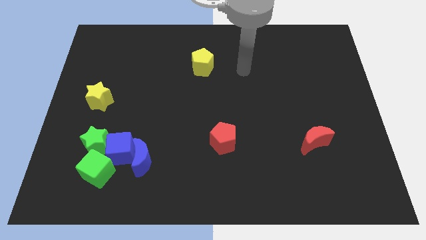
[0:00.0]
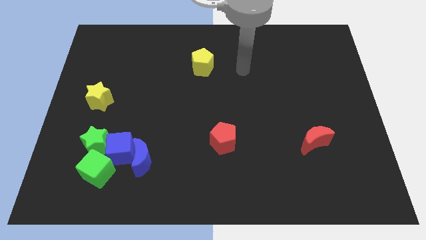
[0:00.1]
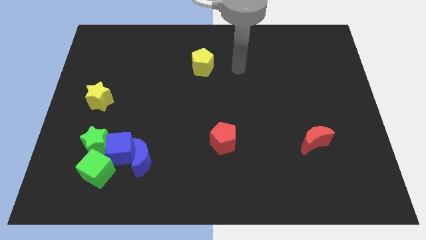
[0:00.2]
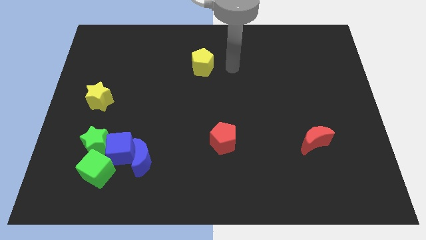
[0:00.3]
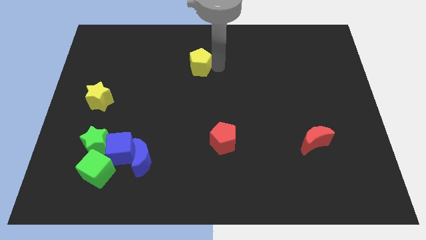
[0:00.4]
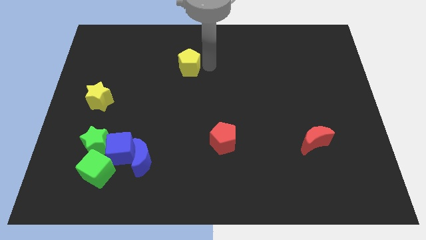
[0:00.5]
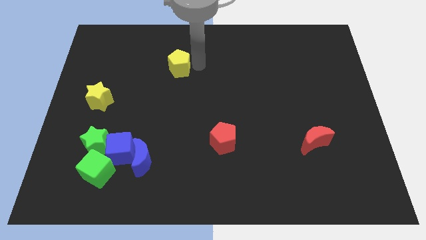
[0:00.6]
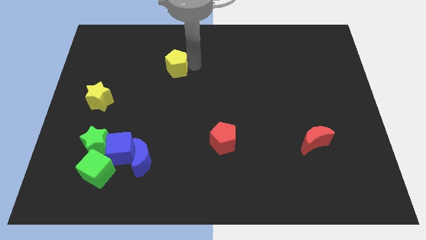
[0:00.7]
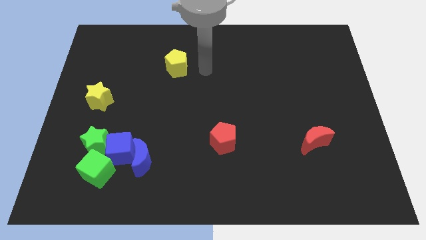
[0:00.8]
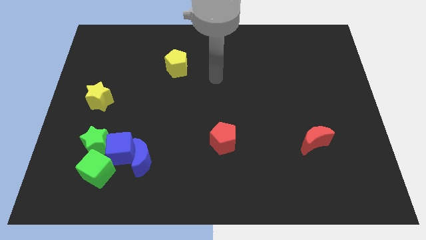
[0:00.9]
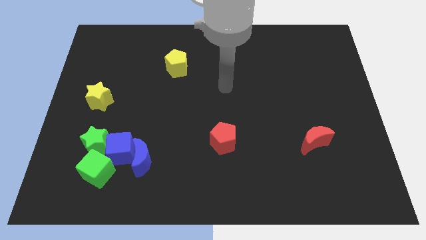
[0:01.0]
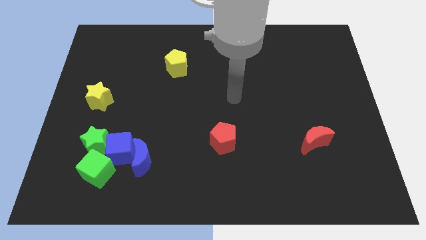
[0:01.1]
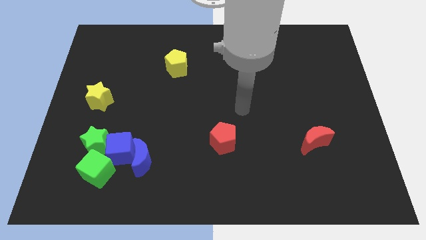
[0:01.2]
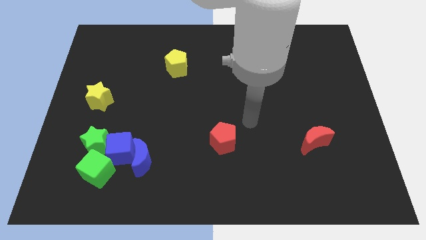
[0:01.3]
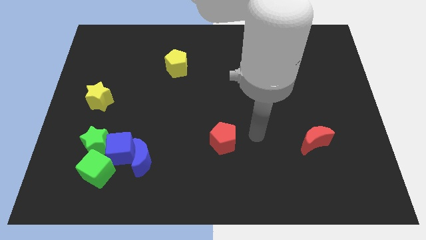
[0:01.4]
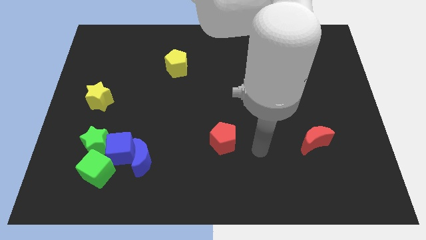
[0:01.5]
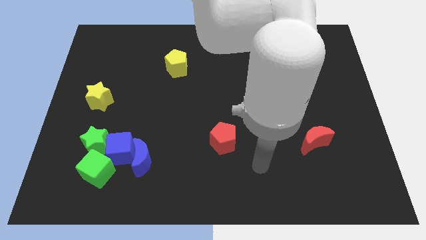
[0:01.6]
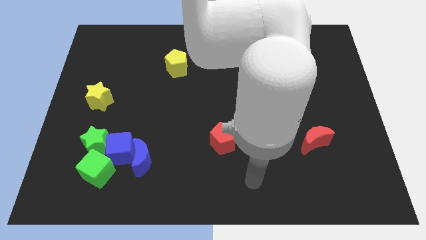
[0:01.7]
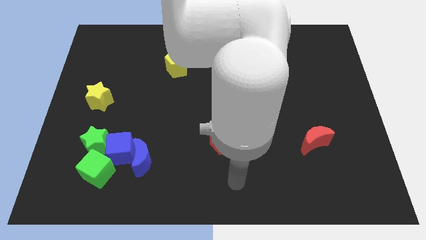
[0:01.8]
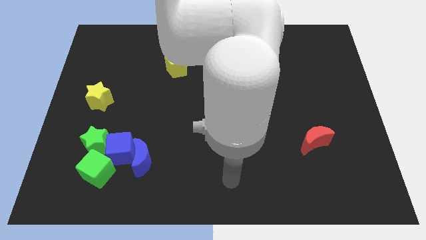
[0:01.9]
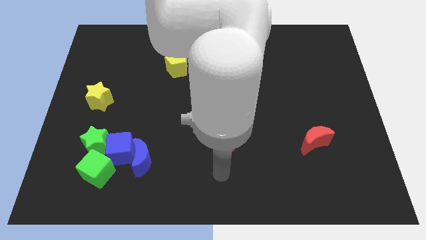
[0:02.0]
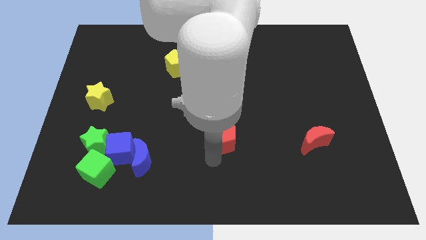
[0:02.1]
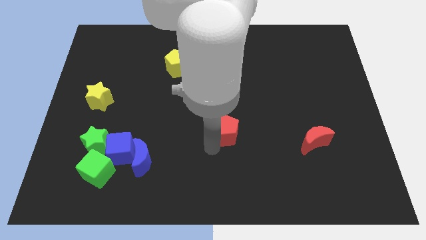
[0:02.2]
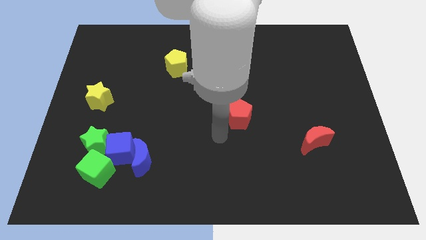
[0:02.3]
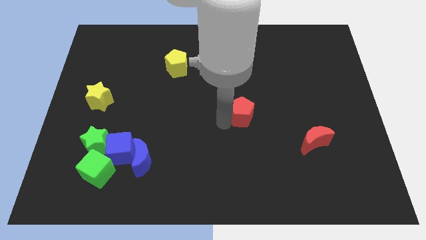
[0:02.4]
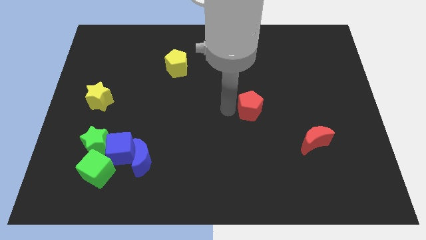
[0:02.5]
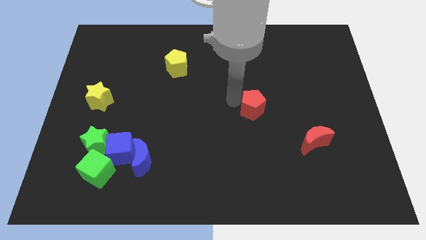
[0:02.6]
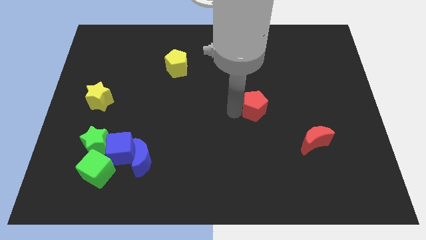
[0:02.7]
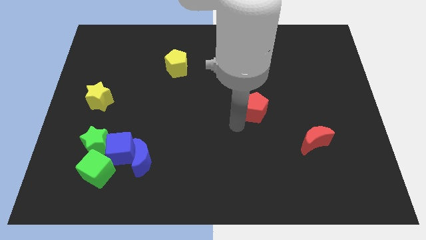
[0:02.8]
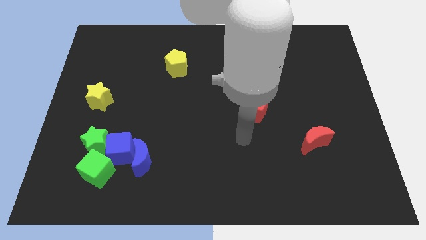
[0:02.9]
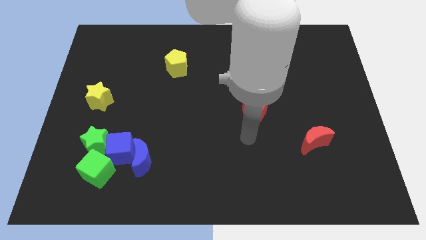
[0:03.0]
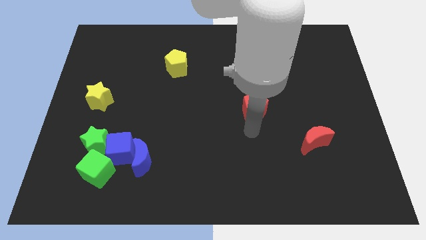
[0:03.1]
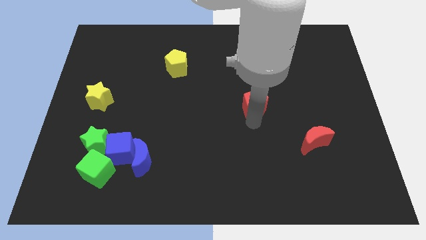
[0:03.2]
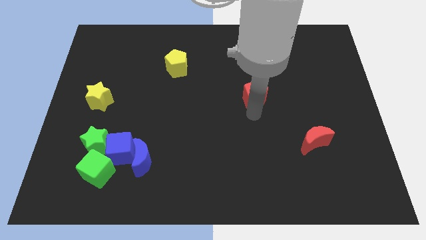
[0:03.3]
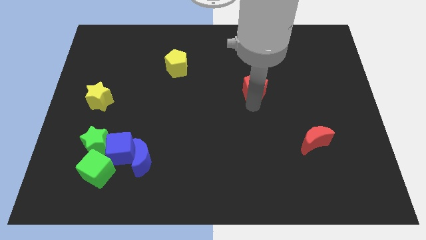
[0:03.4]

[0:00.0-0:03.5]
place the red pentgaon between the yellow pentagon and red moon

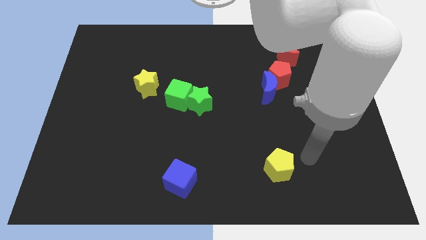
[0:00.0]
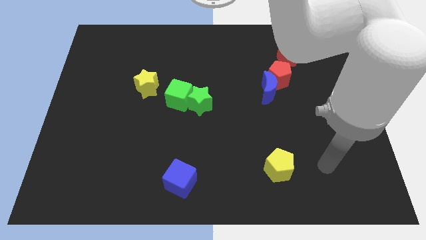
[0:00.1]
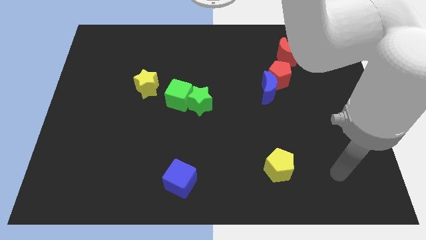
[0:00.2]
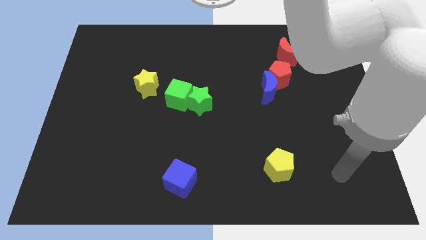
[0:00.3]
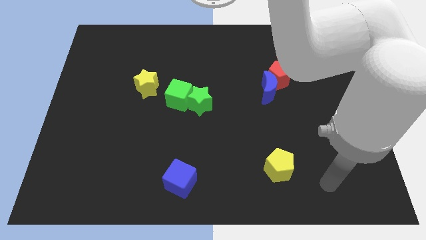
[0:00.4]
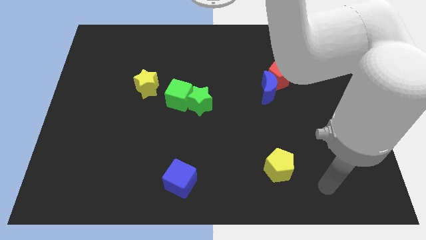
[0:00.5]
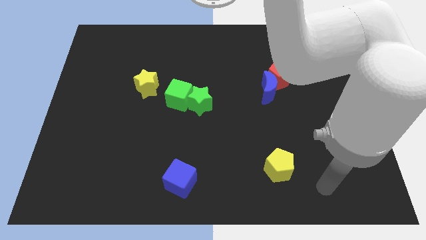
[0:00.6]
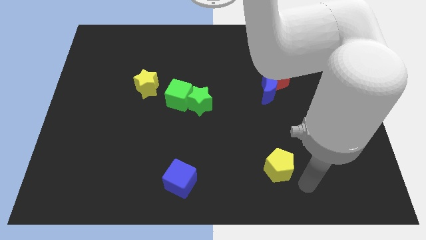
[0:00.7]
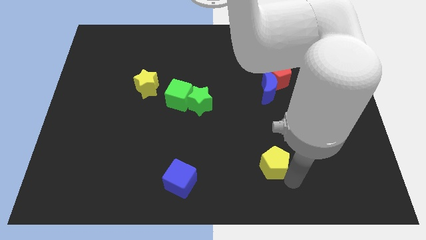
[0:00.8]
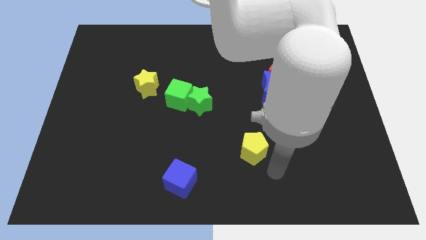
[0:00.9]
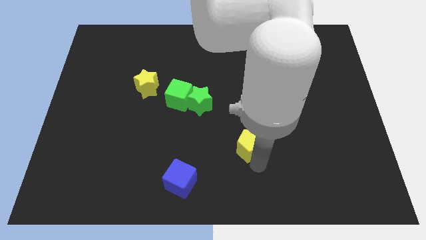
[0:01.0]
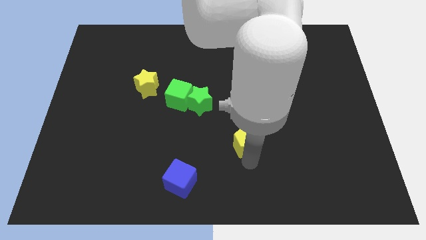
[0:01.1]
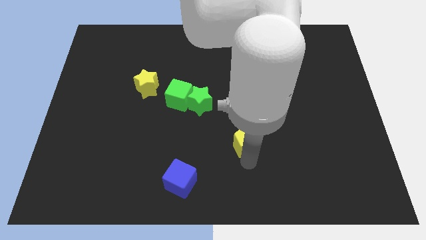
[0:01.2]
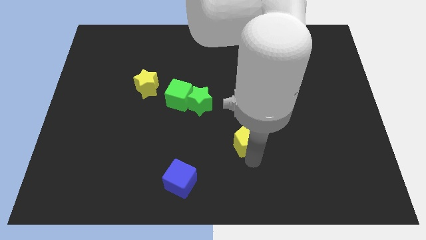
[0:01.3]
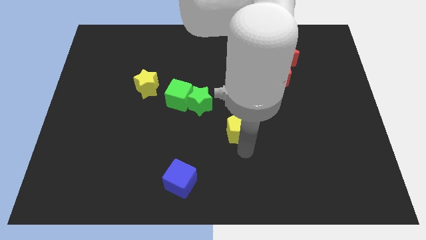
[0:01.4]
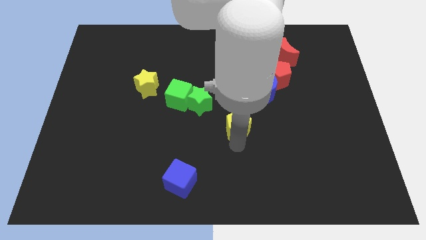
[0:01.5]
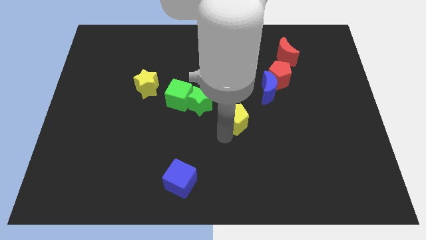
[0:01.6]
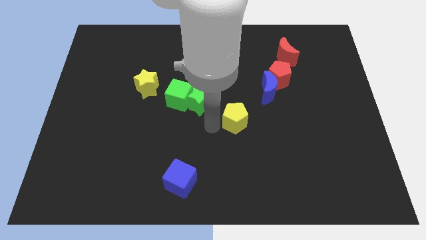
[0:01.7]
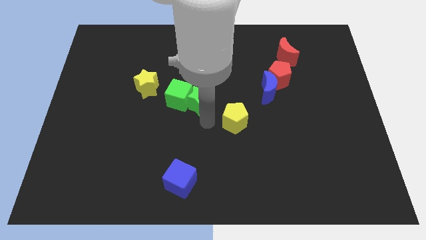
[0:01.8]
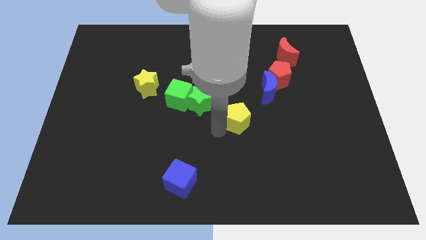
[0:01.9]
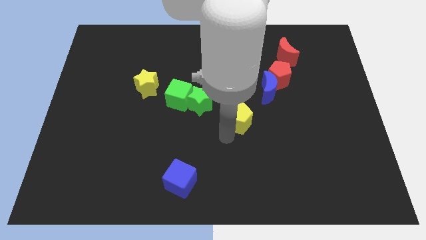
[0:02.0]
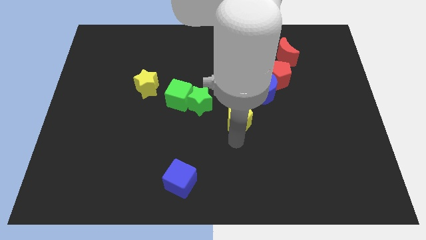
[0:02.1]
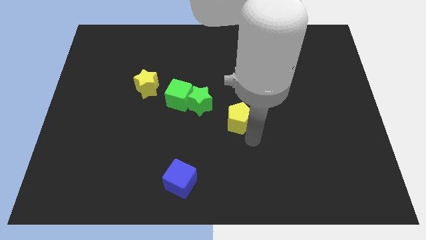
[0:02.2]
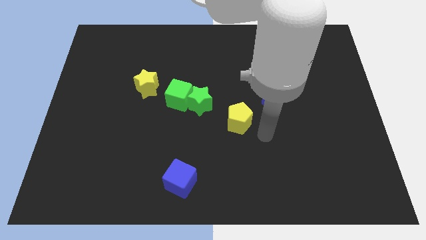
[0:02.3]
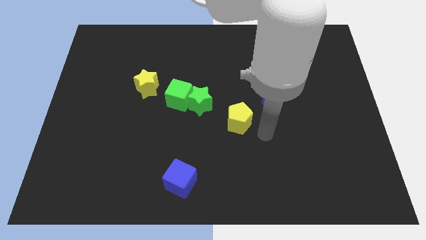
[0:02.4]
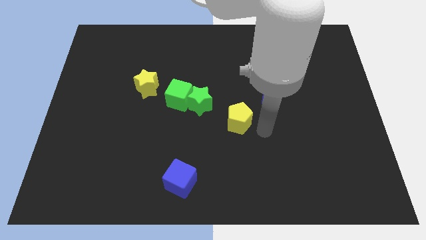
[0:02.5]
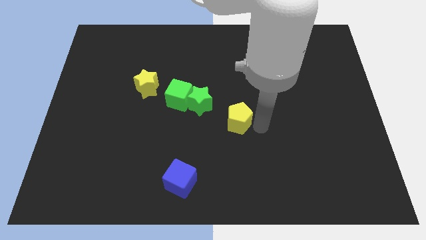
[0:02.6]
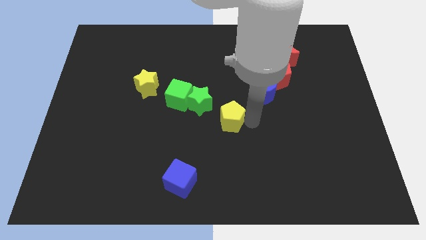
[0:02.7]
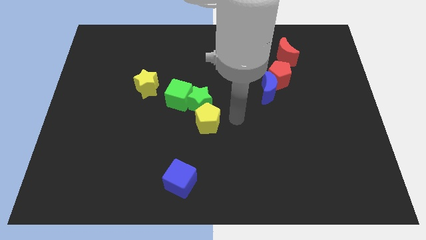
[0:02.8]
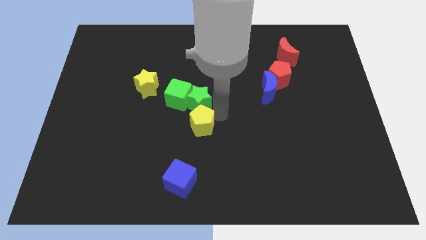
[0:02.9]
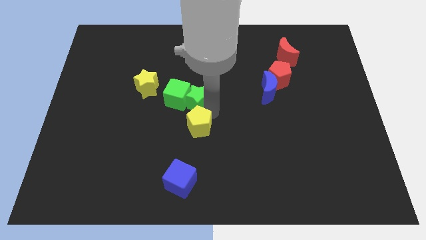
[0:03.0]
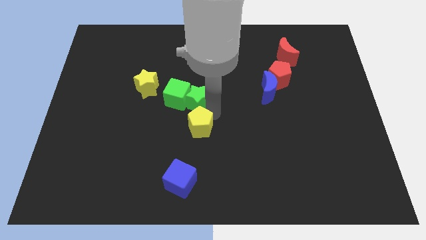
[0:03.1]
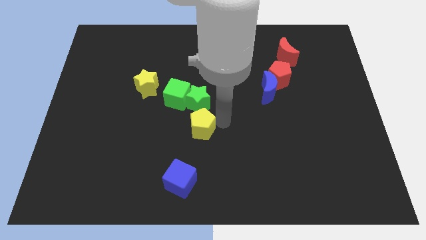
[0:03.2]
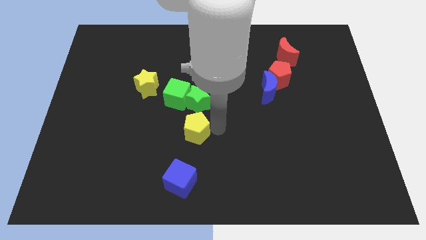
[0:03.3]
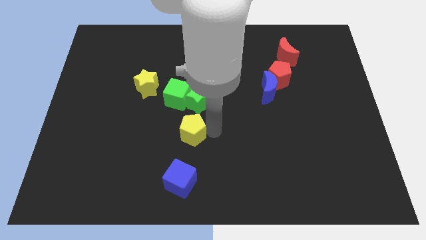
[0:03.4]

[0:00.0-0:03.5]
push the yellow pentagon to the bottom of the green star

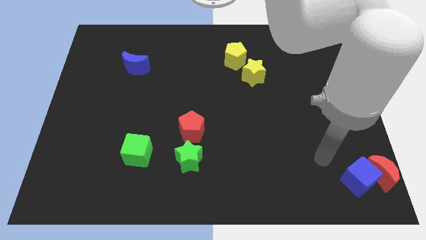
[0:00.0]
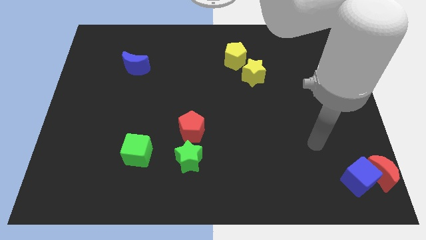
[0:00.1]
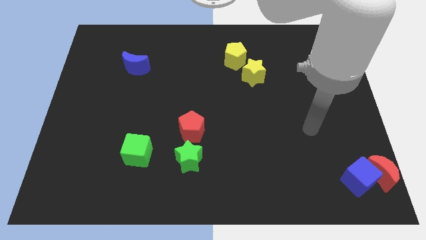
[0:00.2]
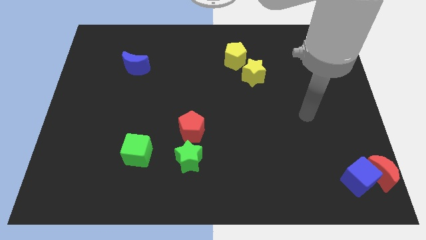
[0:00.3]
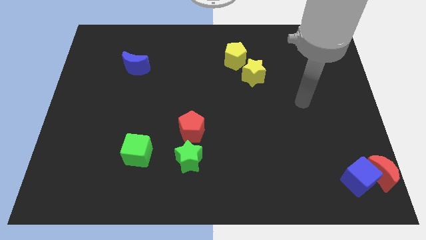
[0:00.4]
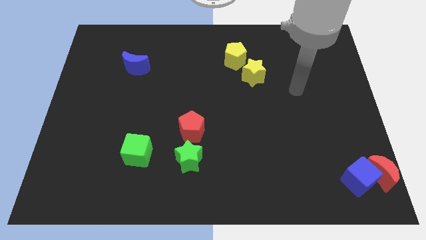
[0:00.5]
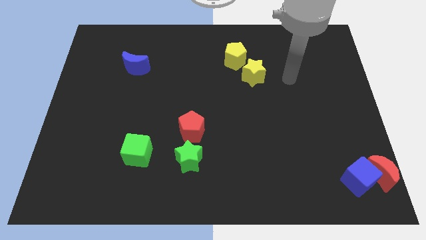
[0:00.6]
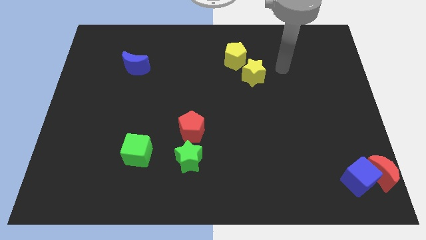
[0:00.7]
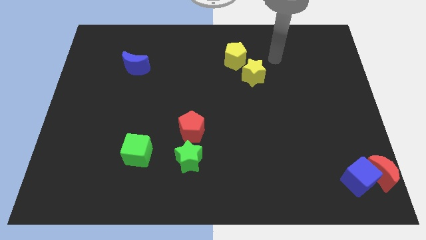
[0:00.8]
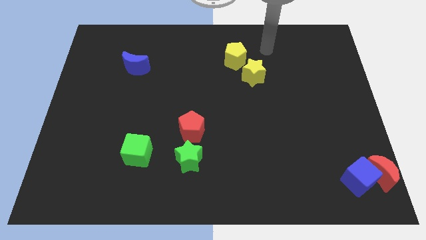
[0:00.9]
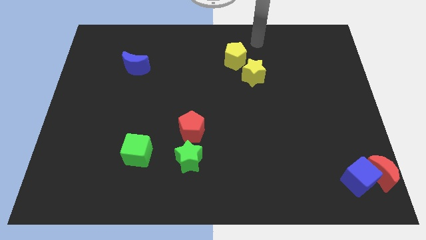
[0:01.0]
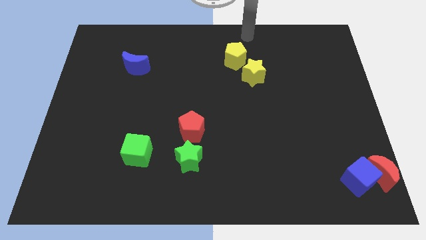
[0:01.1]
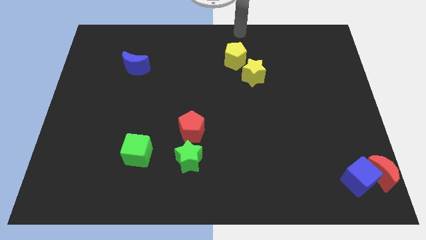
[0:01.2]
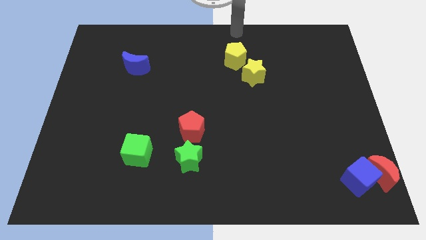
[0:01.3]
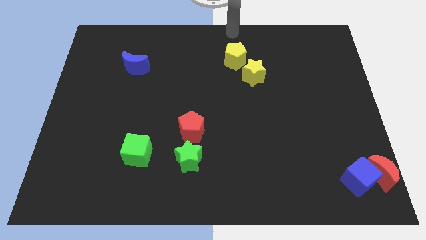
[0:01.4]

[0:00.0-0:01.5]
point your arm above the yellow pentagon

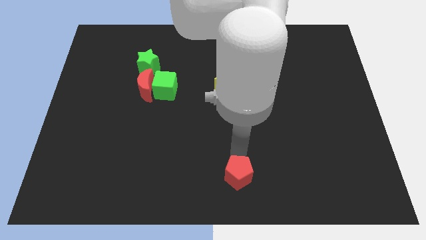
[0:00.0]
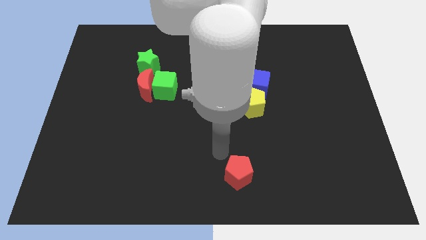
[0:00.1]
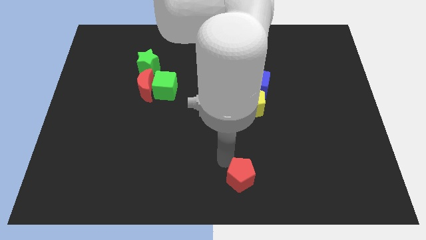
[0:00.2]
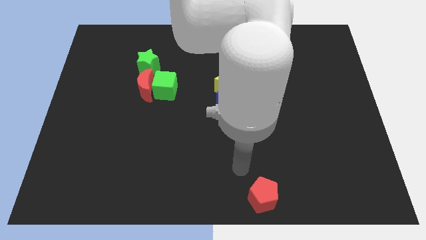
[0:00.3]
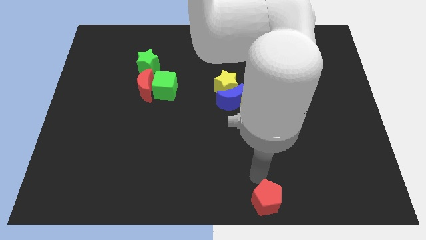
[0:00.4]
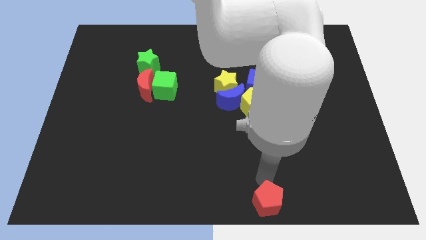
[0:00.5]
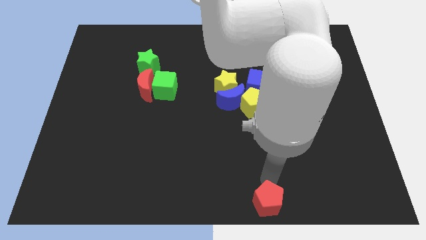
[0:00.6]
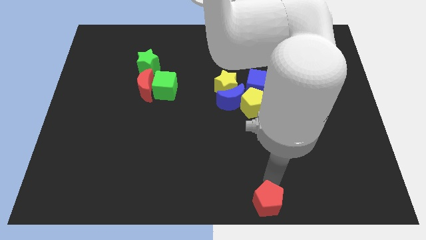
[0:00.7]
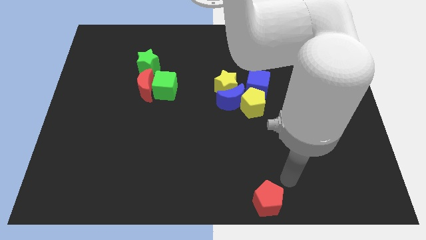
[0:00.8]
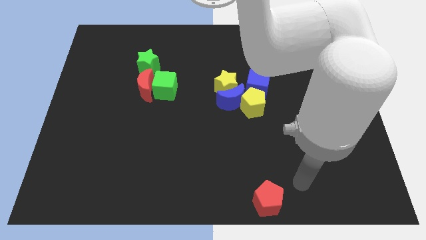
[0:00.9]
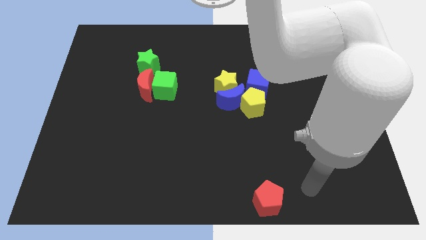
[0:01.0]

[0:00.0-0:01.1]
slightly move the red pentagon to the bottom right
